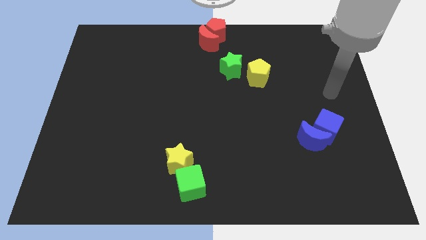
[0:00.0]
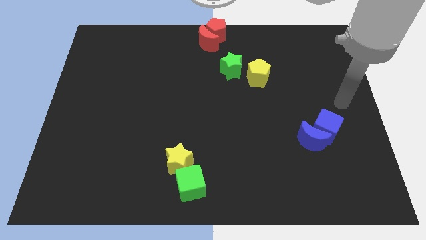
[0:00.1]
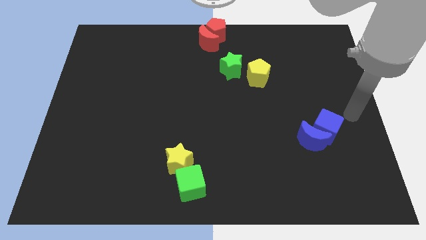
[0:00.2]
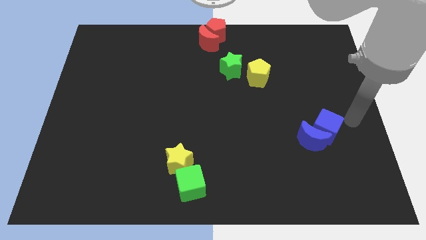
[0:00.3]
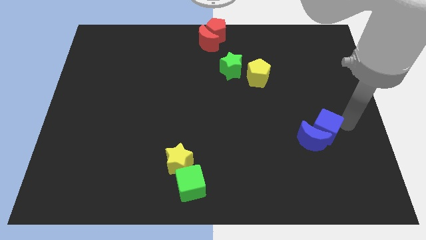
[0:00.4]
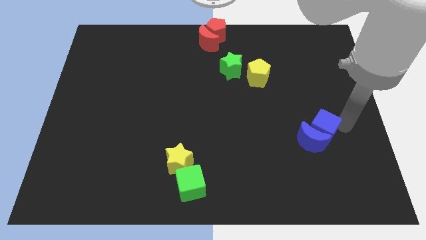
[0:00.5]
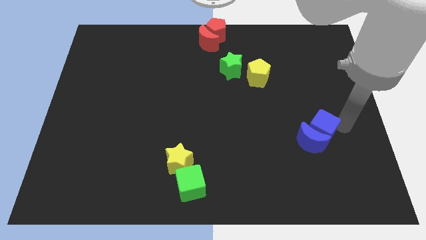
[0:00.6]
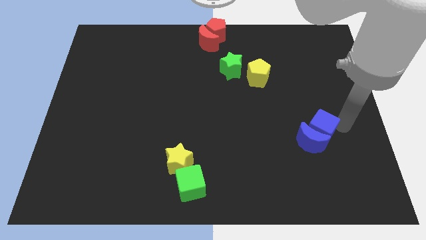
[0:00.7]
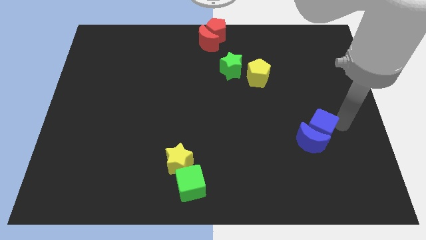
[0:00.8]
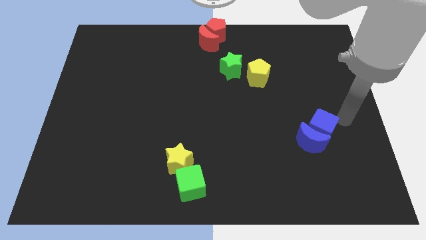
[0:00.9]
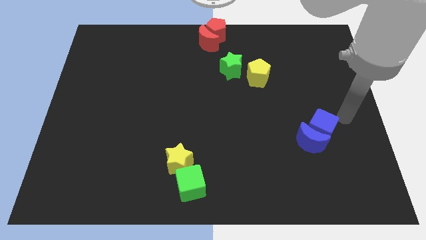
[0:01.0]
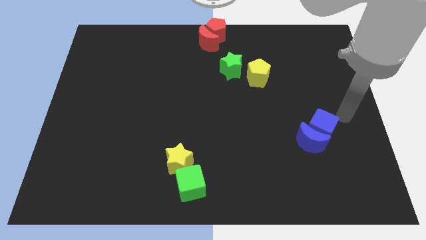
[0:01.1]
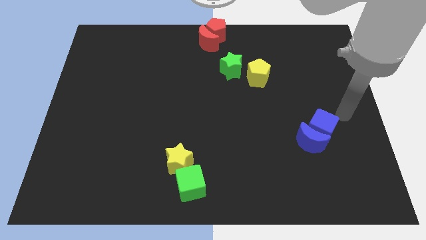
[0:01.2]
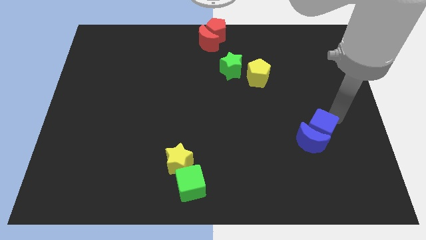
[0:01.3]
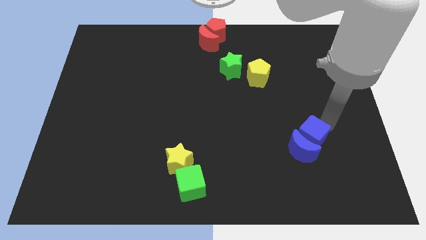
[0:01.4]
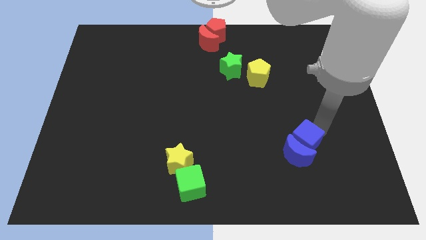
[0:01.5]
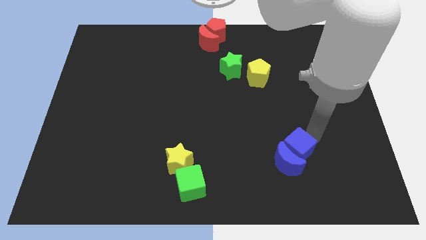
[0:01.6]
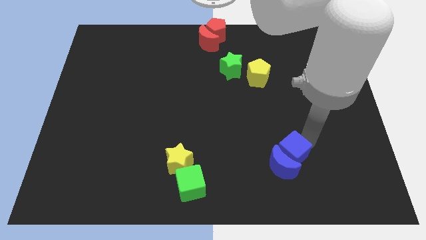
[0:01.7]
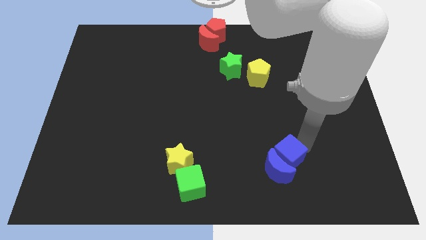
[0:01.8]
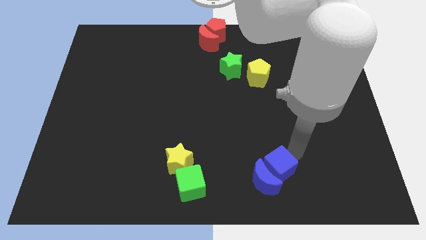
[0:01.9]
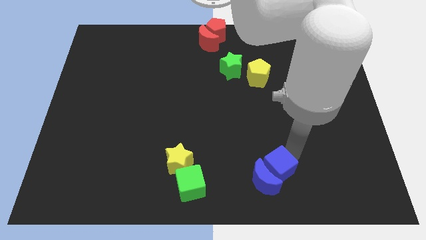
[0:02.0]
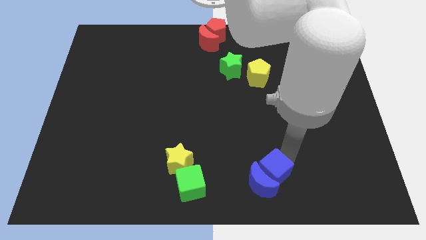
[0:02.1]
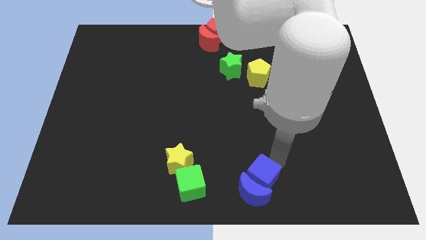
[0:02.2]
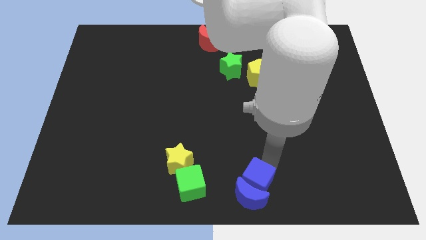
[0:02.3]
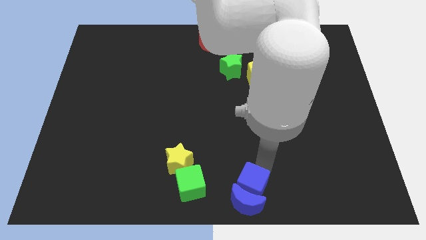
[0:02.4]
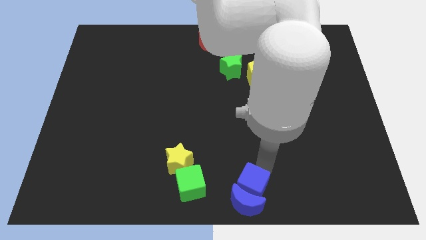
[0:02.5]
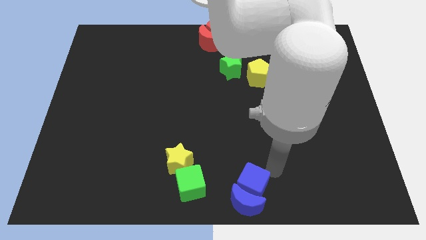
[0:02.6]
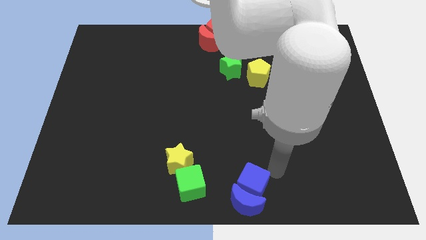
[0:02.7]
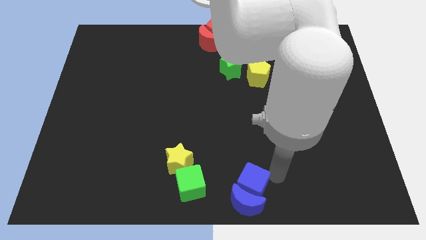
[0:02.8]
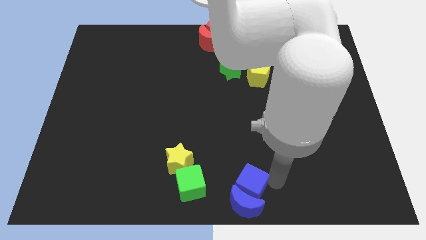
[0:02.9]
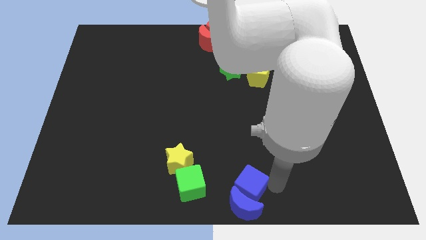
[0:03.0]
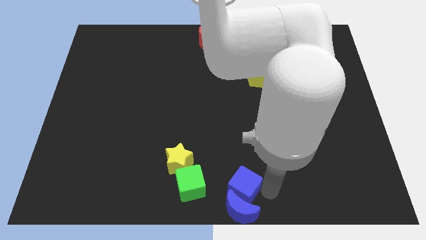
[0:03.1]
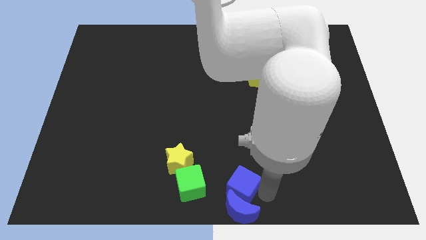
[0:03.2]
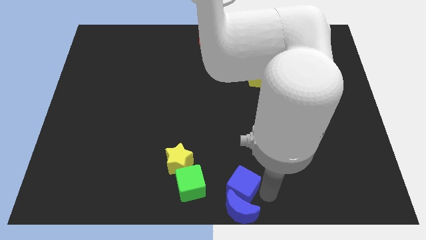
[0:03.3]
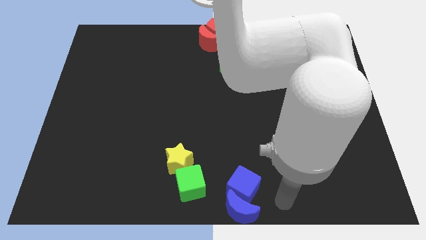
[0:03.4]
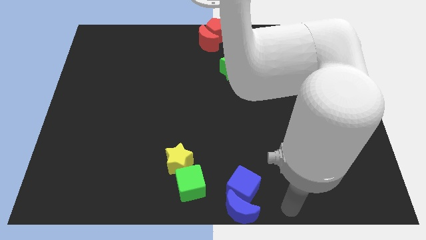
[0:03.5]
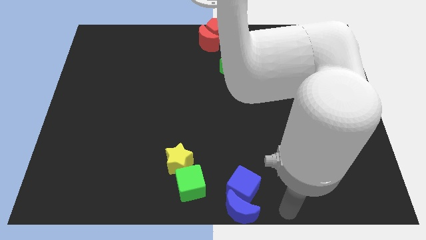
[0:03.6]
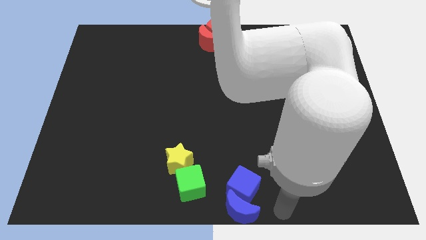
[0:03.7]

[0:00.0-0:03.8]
push the blue blocks to the bottom middle of the board

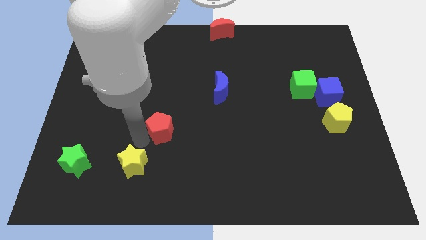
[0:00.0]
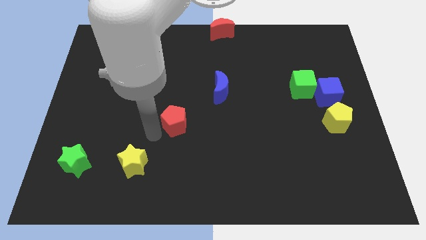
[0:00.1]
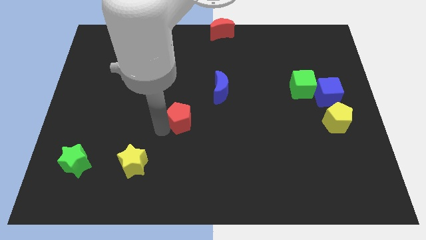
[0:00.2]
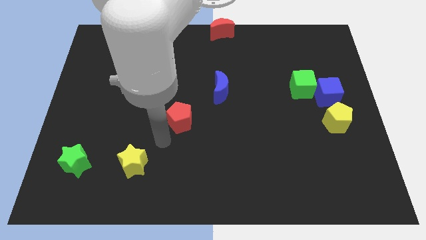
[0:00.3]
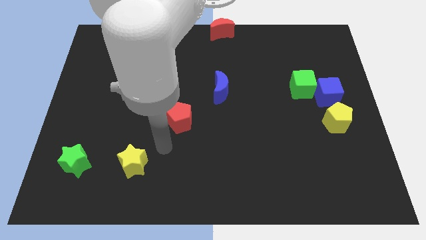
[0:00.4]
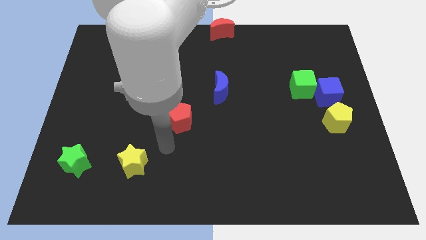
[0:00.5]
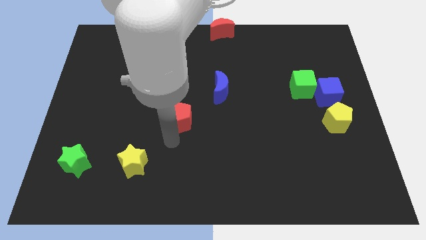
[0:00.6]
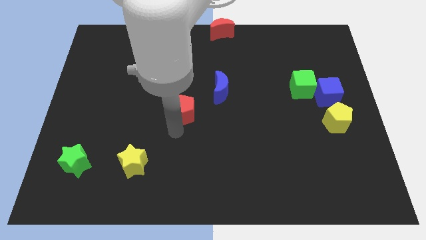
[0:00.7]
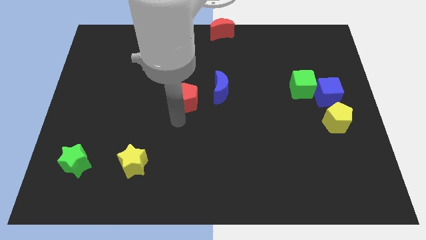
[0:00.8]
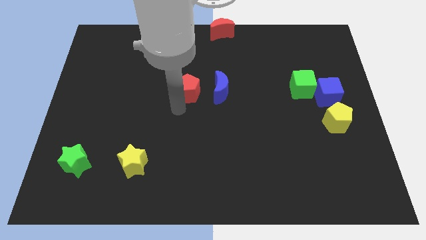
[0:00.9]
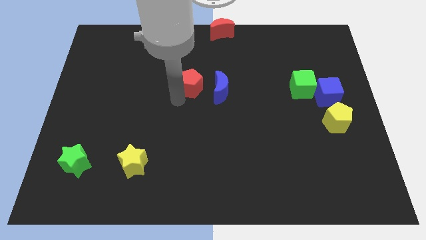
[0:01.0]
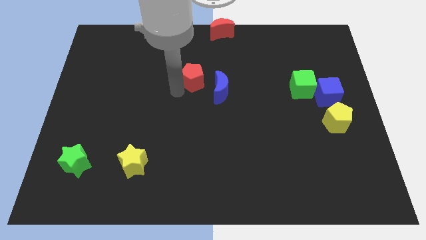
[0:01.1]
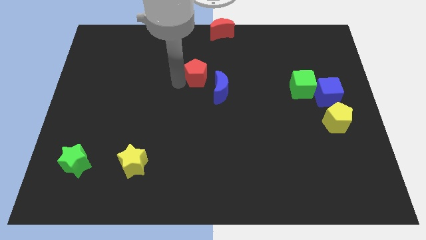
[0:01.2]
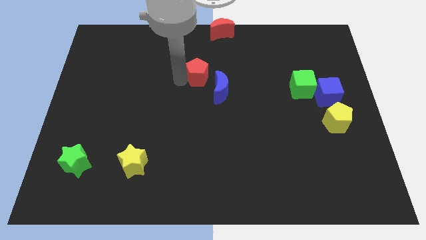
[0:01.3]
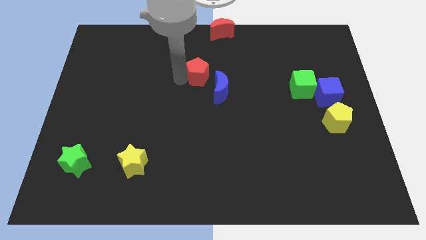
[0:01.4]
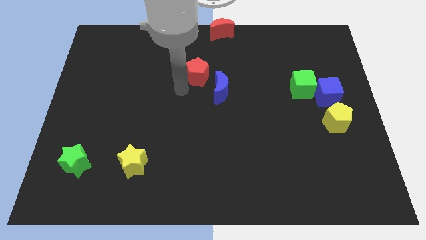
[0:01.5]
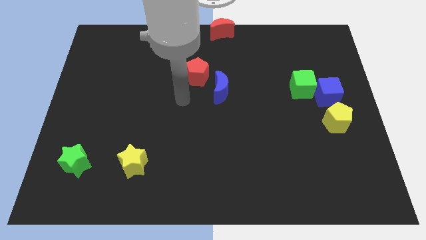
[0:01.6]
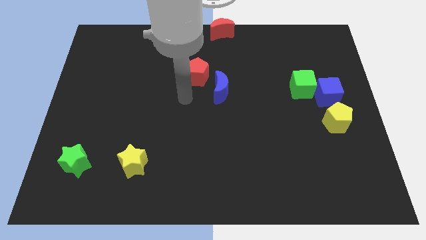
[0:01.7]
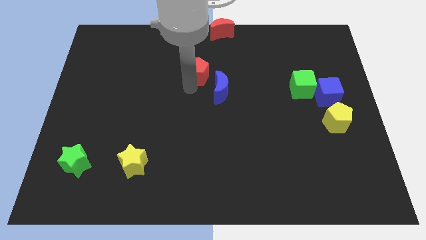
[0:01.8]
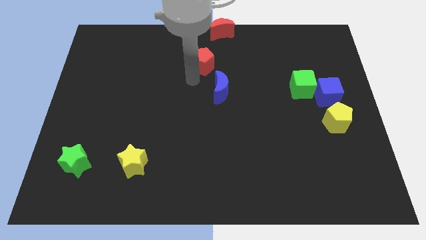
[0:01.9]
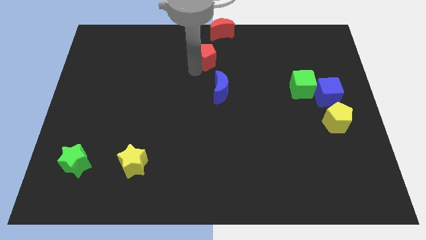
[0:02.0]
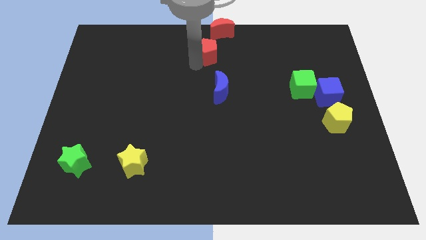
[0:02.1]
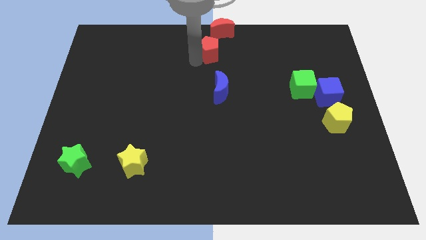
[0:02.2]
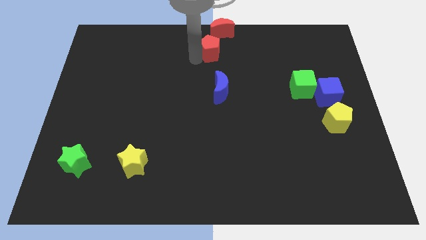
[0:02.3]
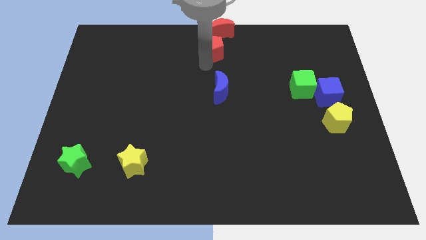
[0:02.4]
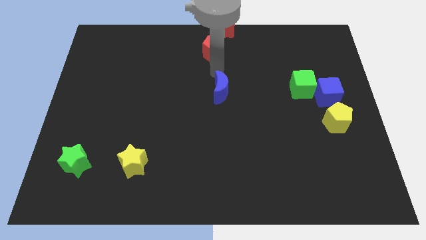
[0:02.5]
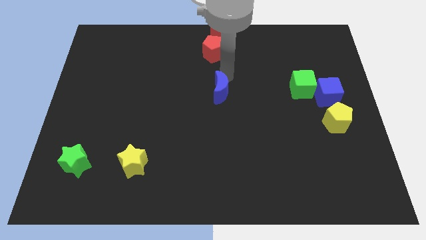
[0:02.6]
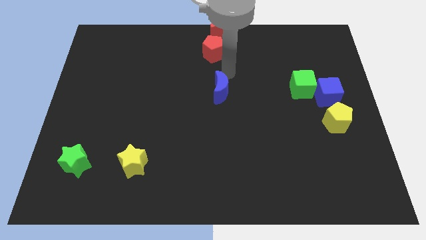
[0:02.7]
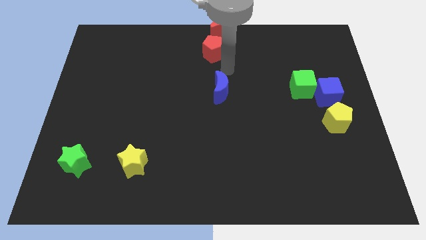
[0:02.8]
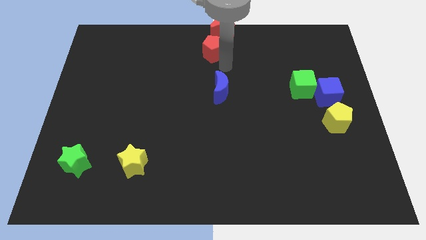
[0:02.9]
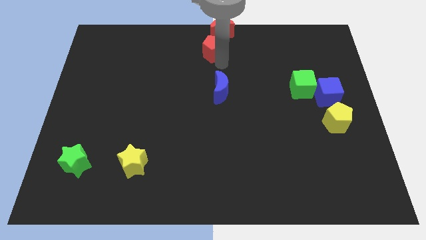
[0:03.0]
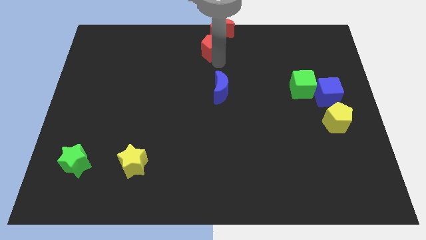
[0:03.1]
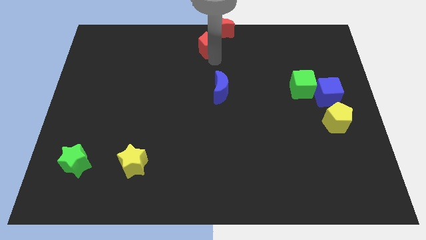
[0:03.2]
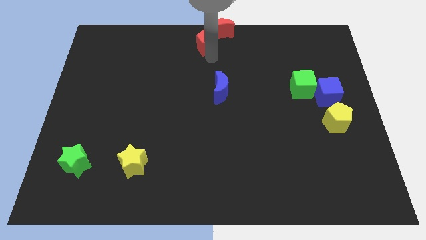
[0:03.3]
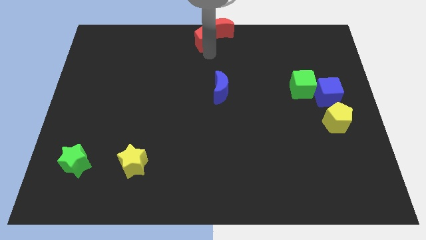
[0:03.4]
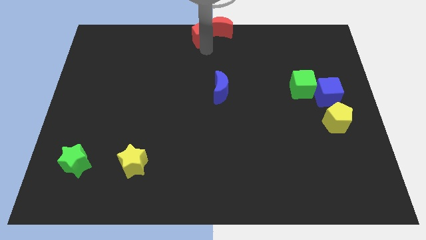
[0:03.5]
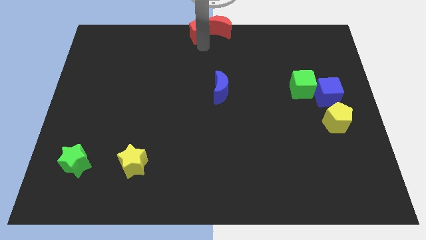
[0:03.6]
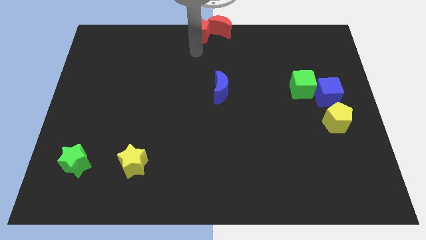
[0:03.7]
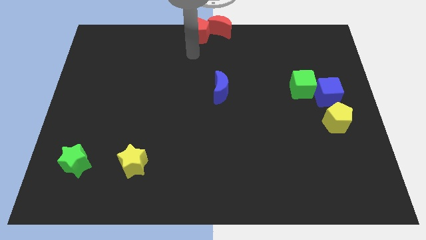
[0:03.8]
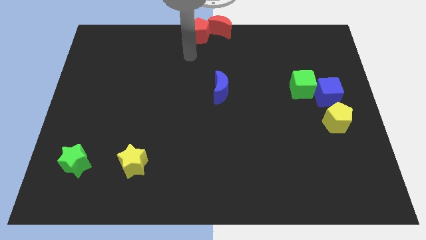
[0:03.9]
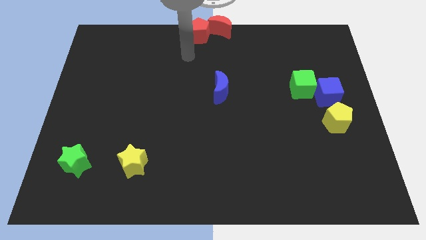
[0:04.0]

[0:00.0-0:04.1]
push red pentagon into red moon

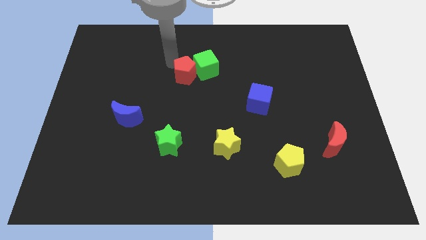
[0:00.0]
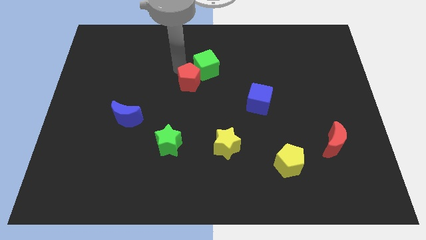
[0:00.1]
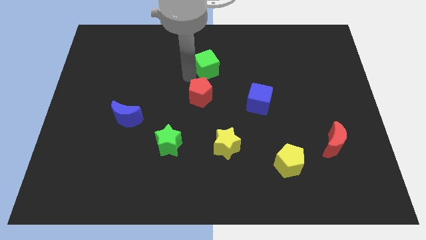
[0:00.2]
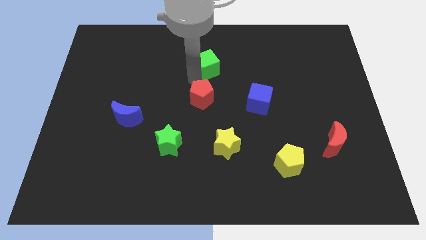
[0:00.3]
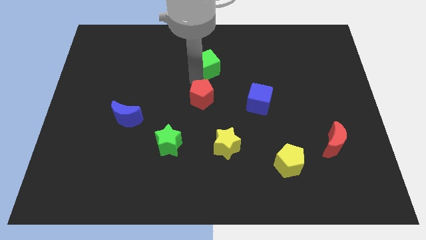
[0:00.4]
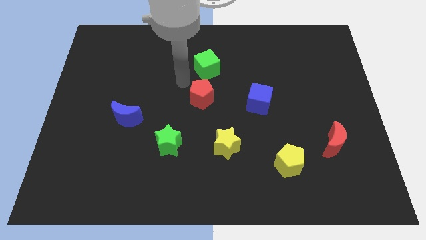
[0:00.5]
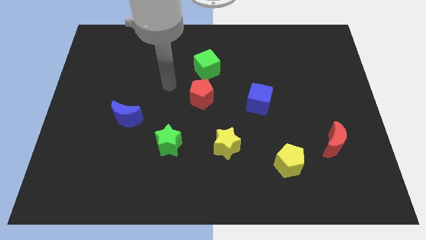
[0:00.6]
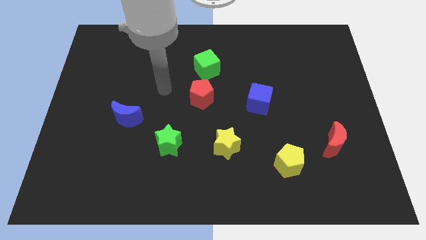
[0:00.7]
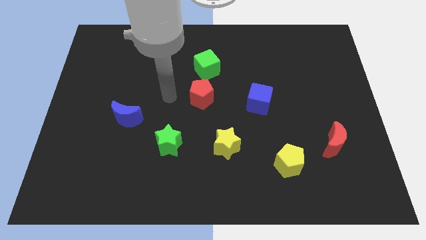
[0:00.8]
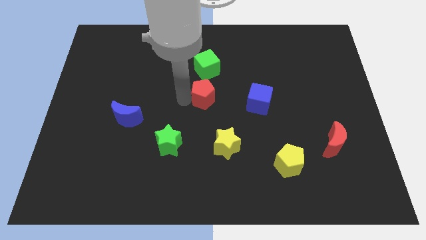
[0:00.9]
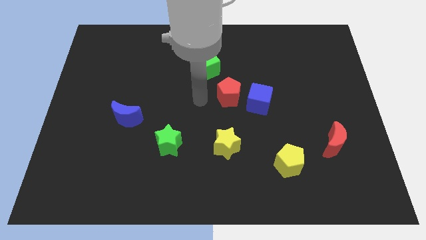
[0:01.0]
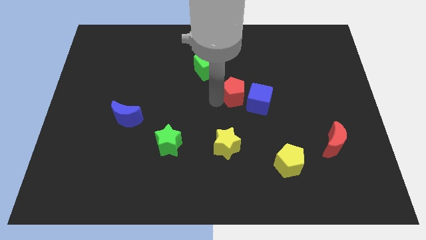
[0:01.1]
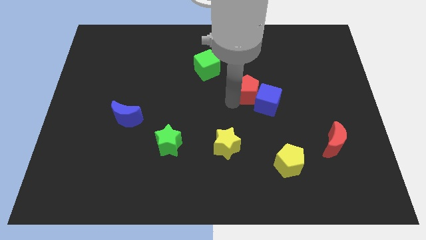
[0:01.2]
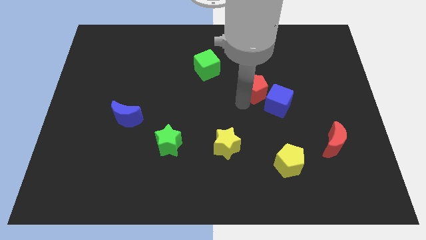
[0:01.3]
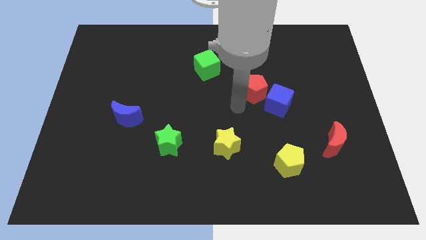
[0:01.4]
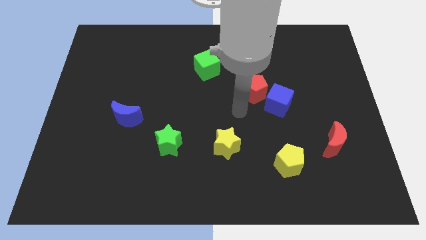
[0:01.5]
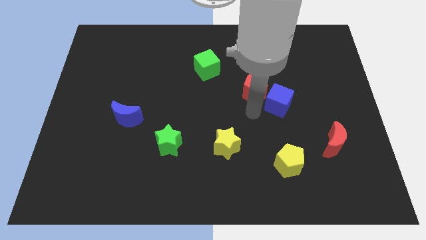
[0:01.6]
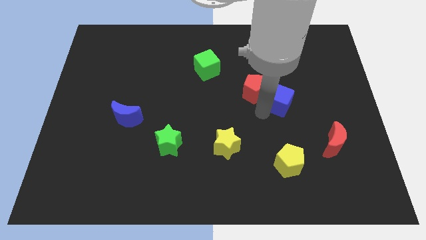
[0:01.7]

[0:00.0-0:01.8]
move red pentagon into blue cube
